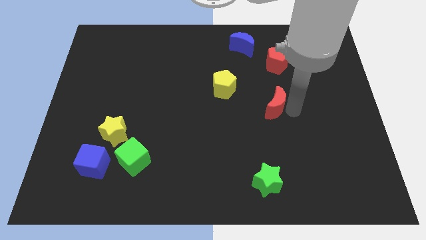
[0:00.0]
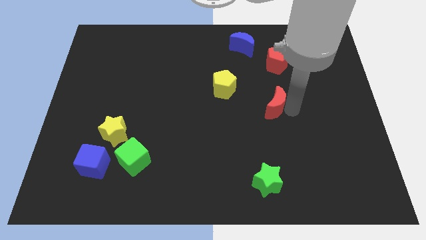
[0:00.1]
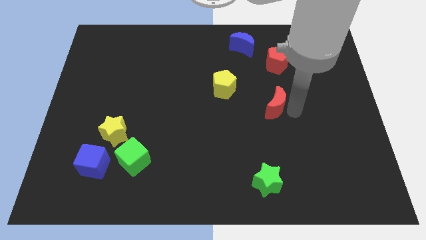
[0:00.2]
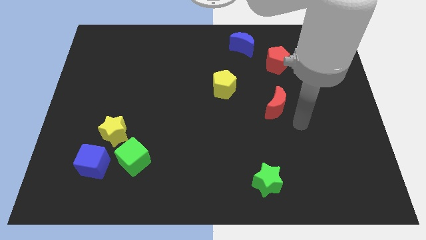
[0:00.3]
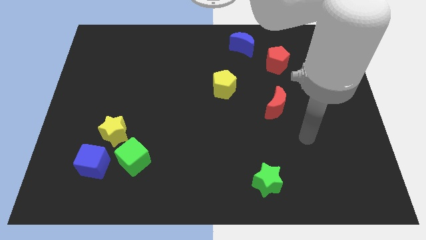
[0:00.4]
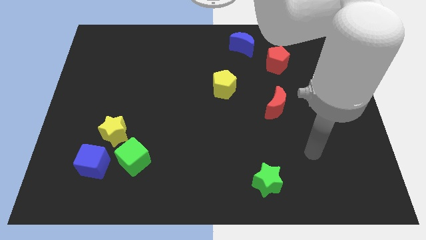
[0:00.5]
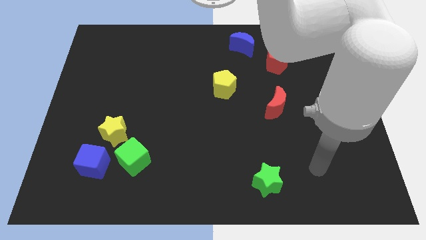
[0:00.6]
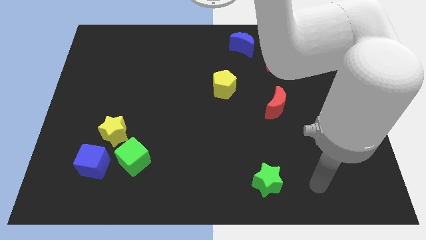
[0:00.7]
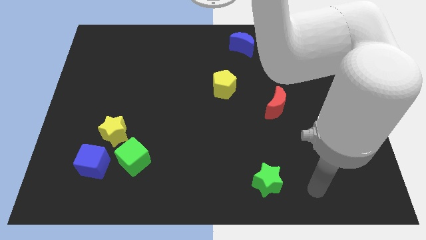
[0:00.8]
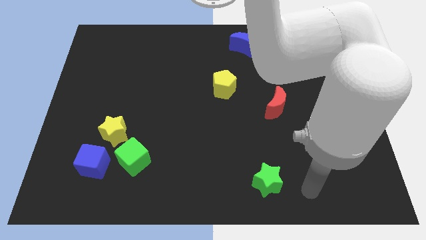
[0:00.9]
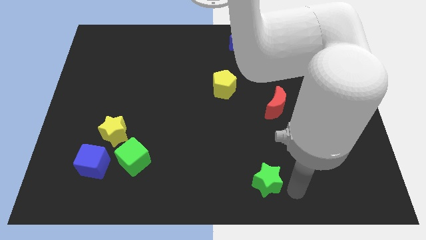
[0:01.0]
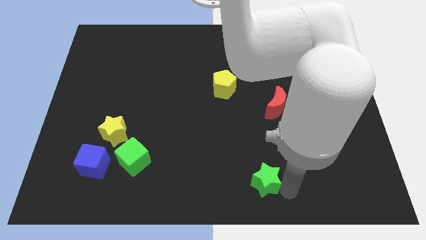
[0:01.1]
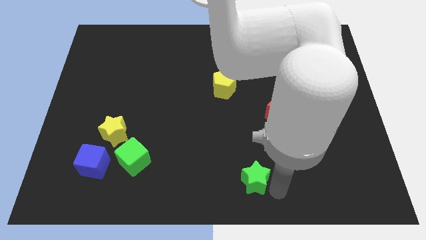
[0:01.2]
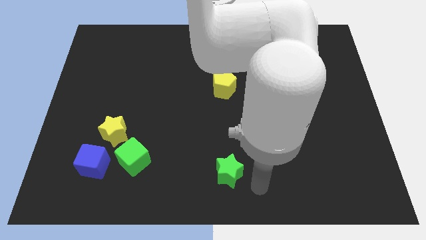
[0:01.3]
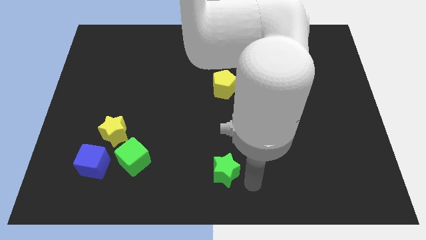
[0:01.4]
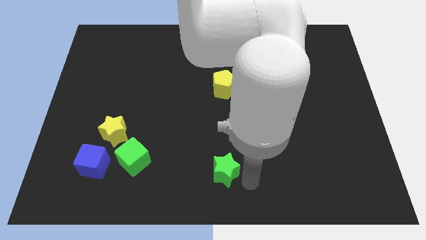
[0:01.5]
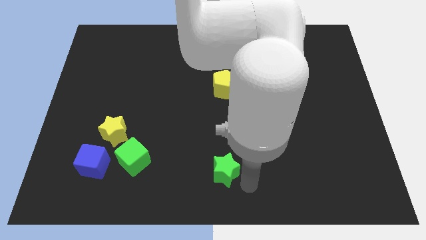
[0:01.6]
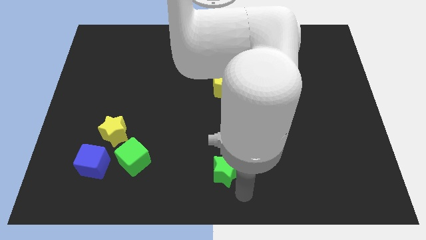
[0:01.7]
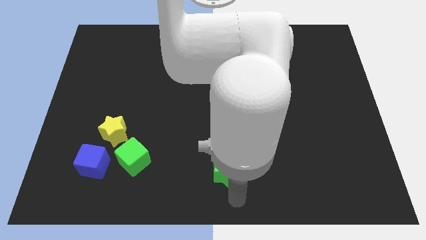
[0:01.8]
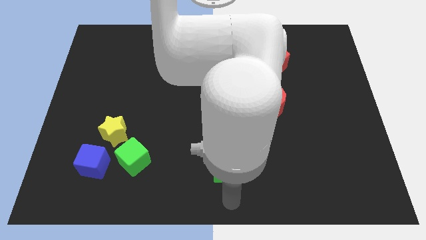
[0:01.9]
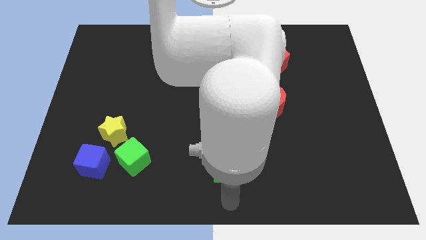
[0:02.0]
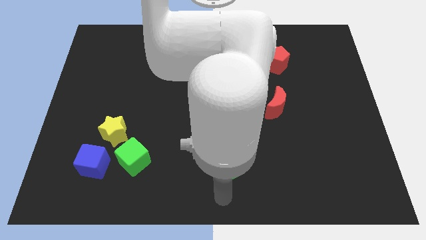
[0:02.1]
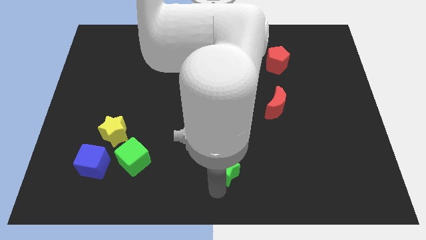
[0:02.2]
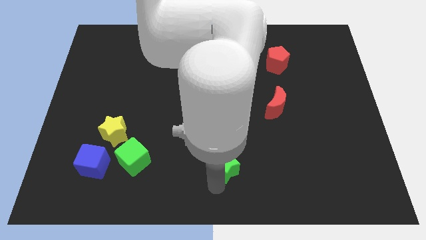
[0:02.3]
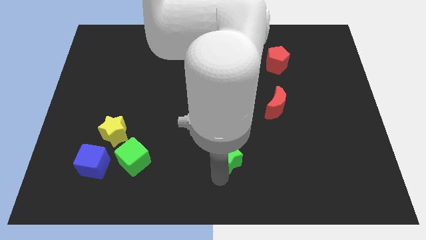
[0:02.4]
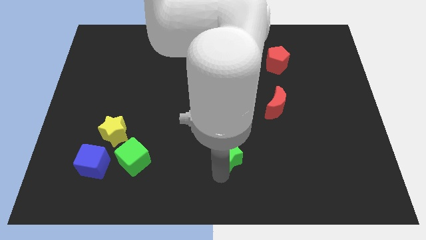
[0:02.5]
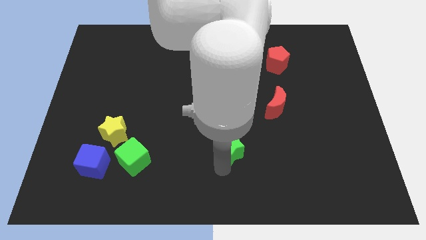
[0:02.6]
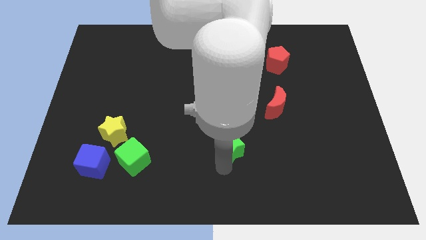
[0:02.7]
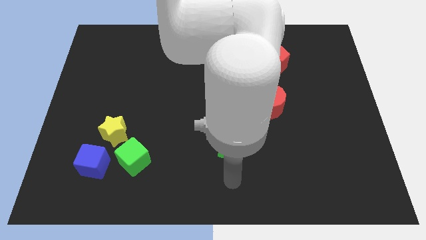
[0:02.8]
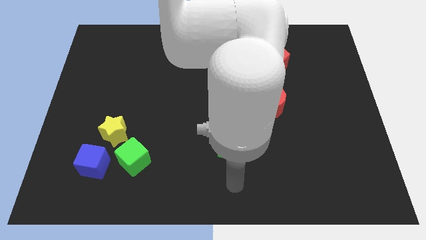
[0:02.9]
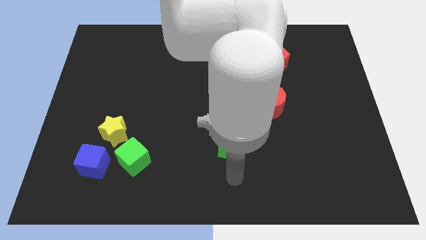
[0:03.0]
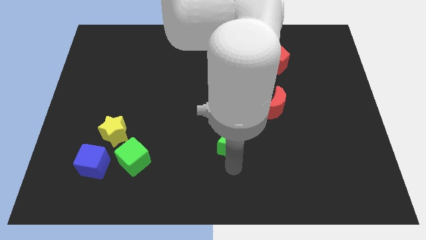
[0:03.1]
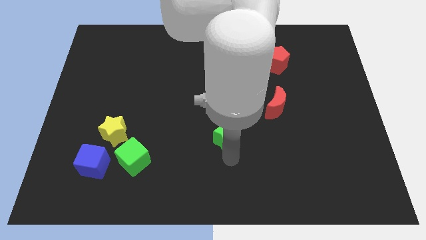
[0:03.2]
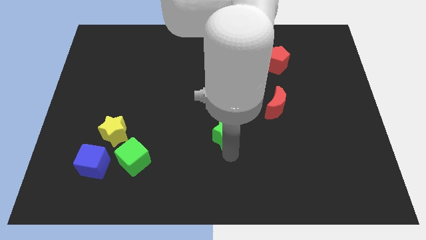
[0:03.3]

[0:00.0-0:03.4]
push the green star below to the yellow pentagon

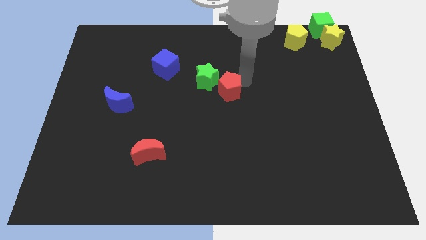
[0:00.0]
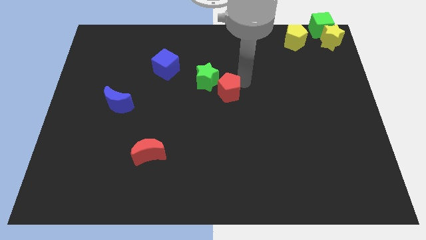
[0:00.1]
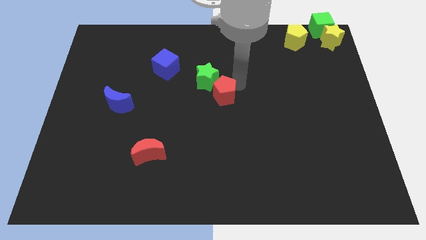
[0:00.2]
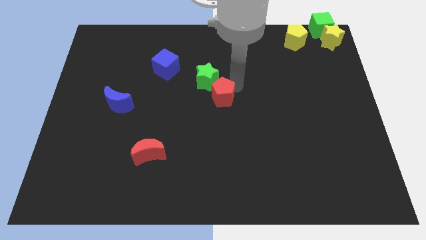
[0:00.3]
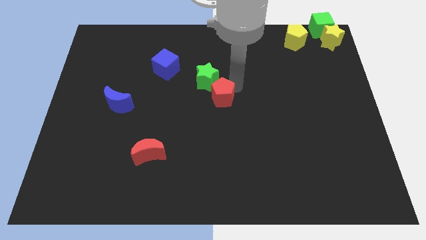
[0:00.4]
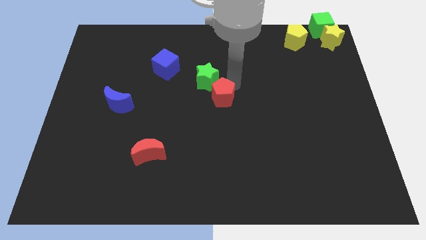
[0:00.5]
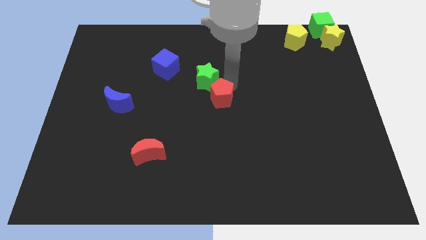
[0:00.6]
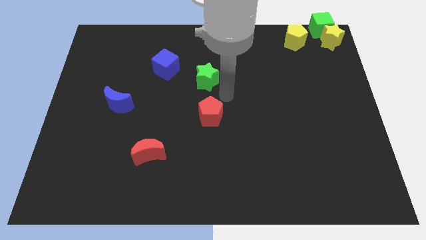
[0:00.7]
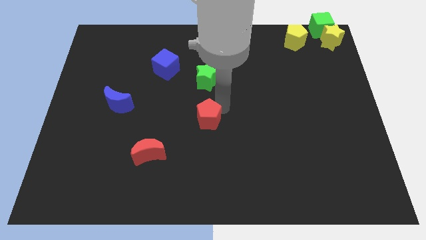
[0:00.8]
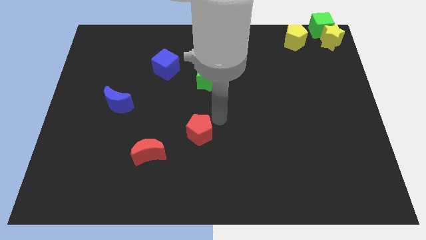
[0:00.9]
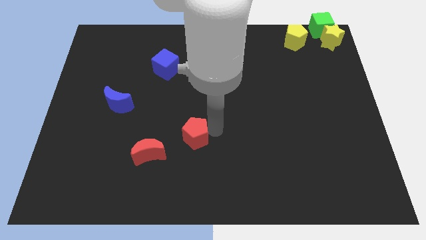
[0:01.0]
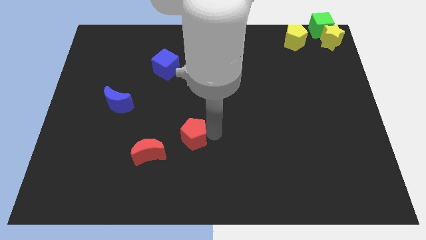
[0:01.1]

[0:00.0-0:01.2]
move the red pentagon right of red crescent

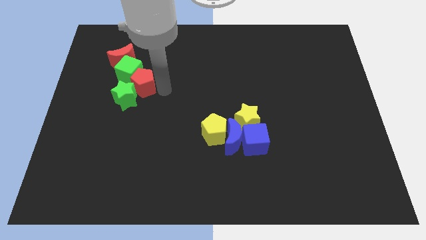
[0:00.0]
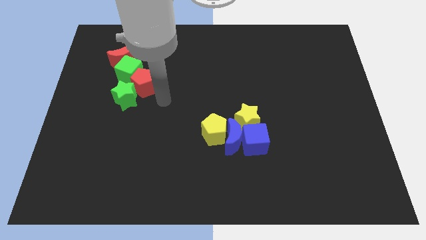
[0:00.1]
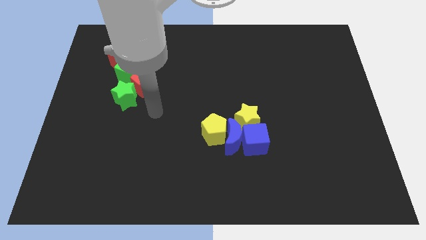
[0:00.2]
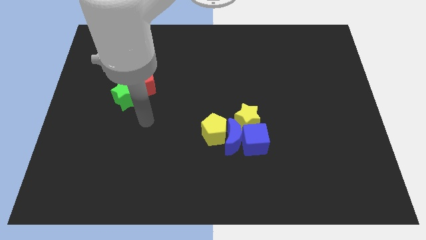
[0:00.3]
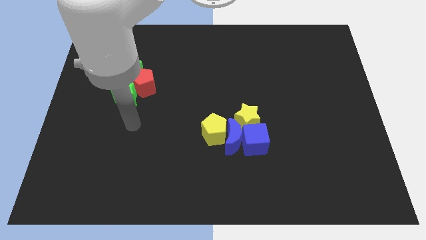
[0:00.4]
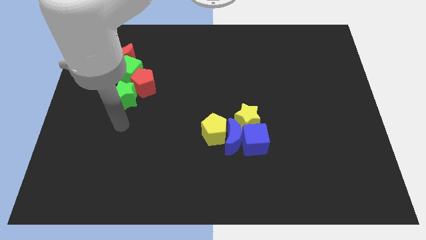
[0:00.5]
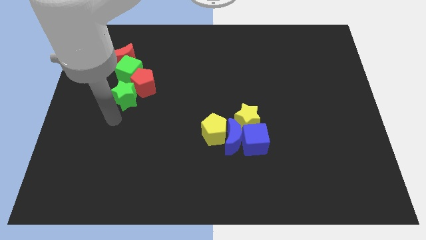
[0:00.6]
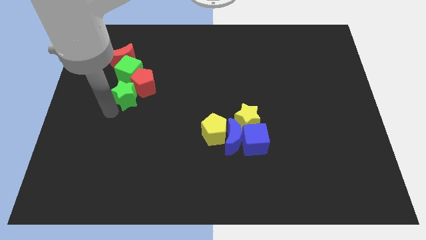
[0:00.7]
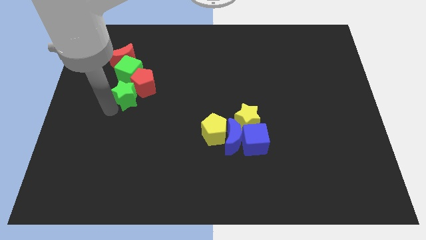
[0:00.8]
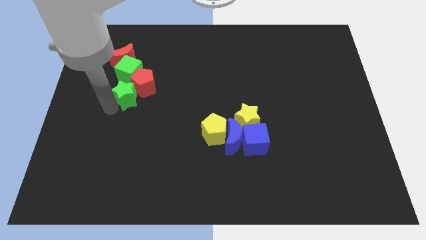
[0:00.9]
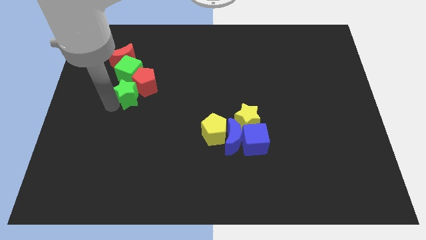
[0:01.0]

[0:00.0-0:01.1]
place your arm at the bottom left side of the green star

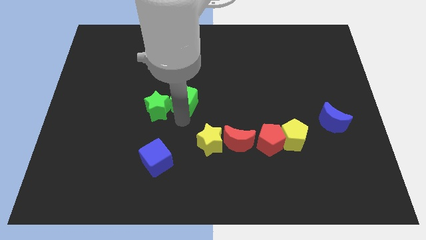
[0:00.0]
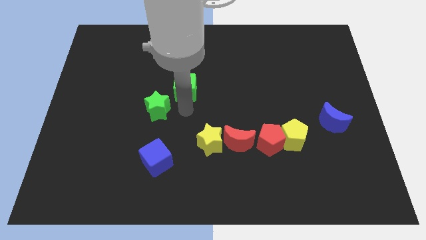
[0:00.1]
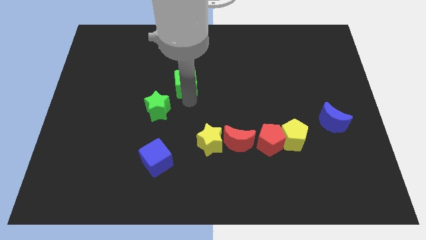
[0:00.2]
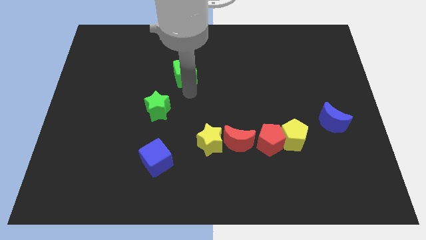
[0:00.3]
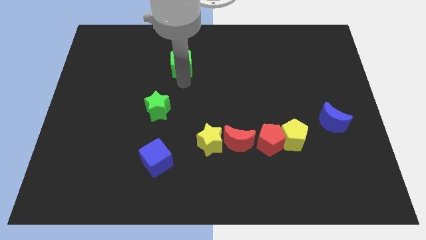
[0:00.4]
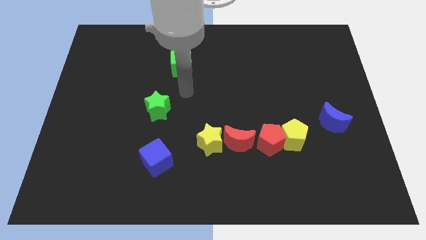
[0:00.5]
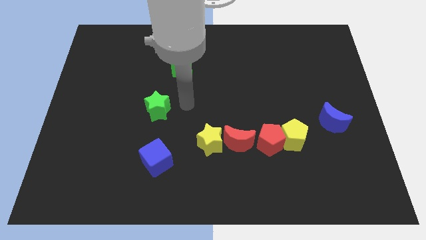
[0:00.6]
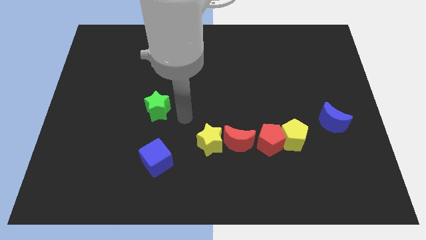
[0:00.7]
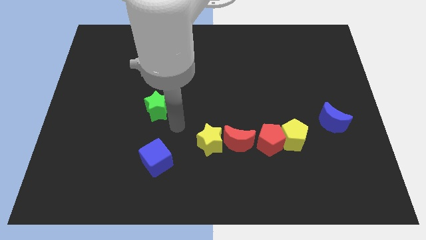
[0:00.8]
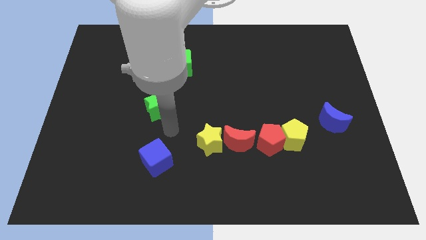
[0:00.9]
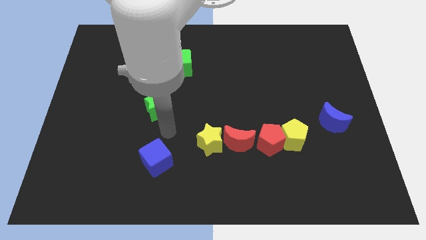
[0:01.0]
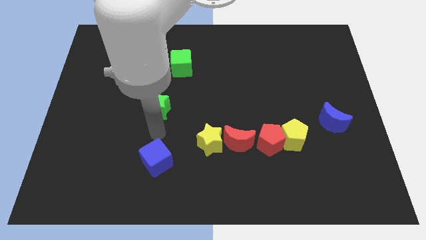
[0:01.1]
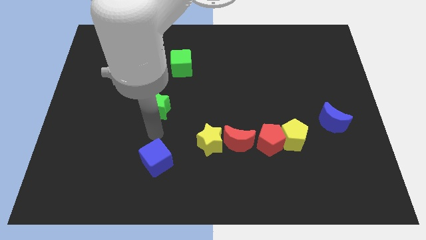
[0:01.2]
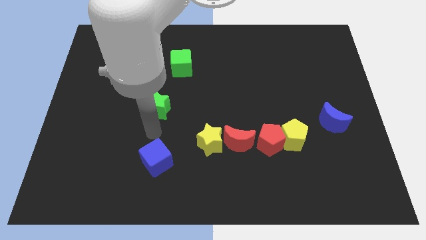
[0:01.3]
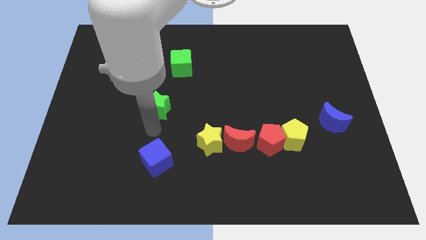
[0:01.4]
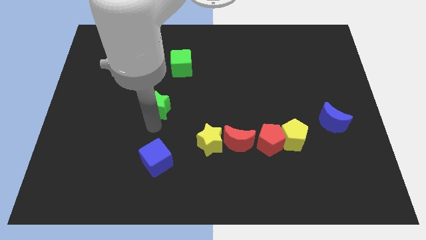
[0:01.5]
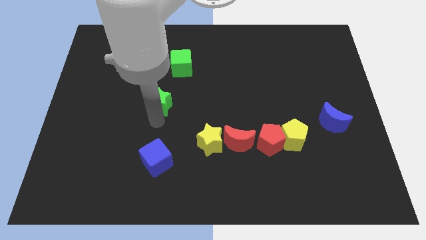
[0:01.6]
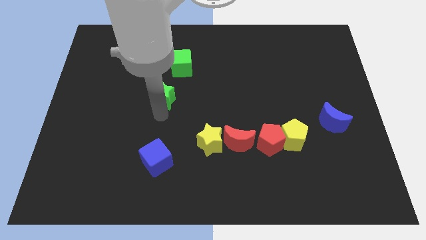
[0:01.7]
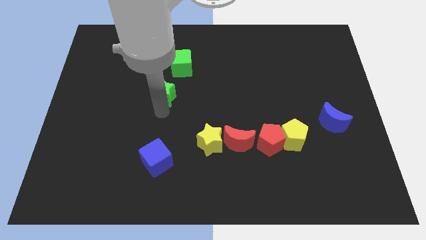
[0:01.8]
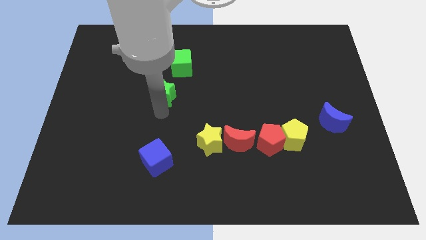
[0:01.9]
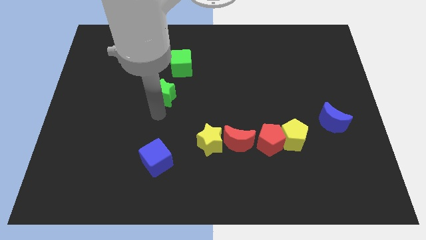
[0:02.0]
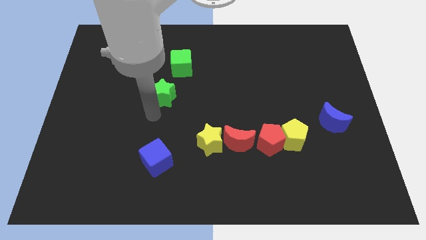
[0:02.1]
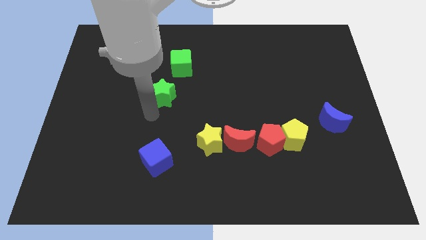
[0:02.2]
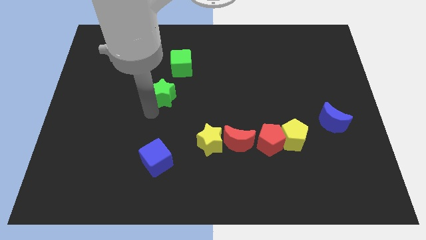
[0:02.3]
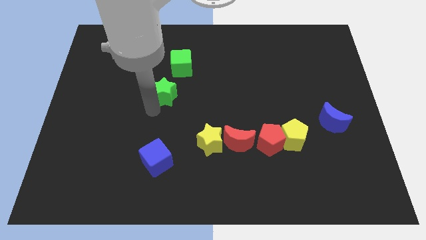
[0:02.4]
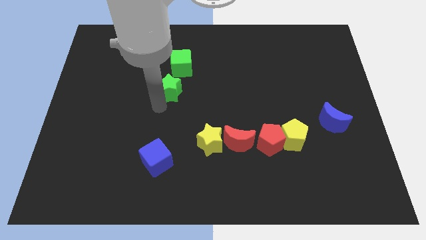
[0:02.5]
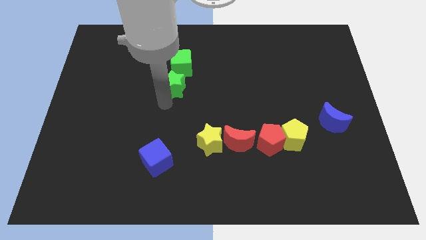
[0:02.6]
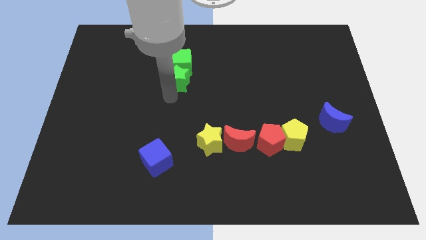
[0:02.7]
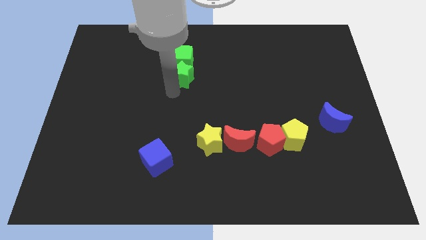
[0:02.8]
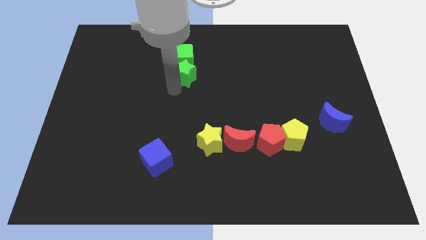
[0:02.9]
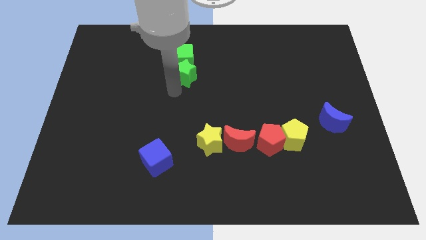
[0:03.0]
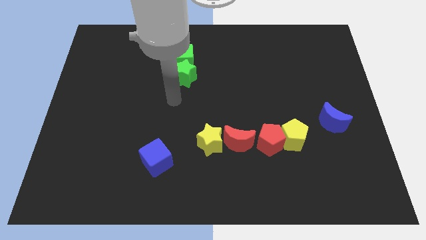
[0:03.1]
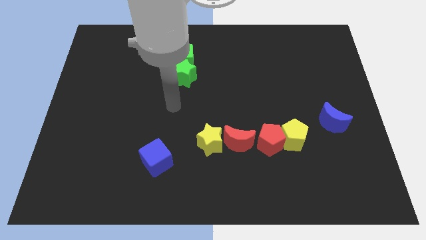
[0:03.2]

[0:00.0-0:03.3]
push the green star into the green cube
